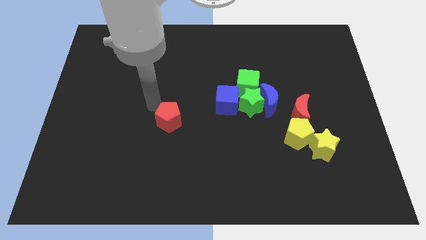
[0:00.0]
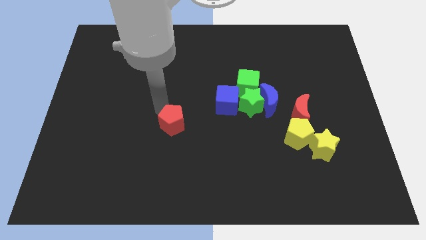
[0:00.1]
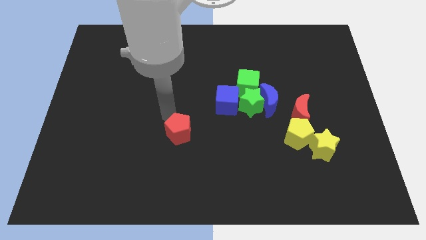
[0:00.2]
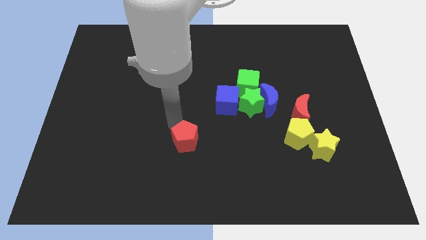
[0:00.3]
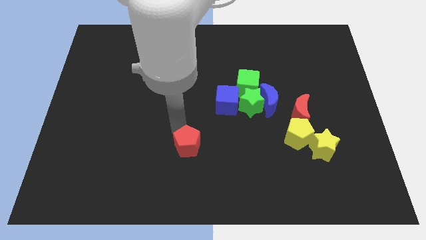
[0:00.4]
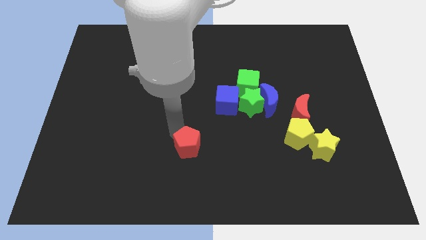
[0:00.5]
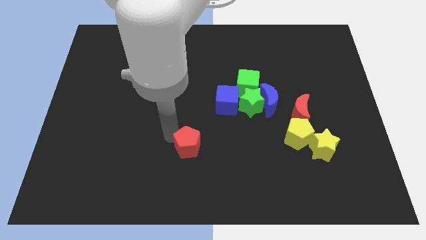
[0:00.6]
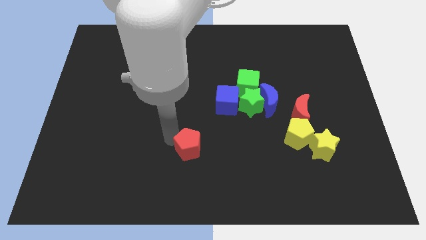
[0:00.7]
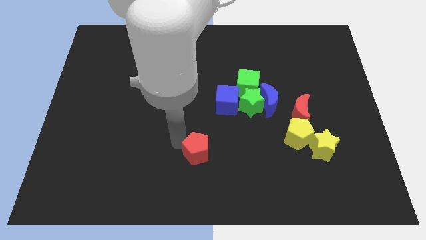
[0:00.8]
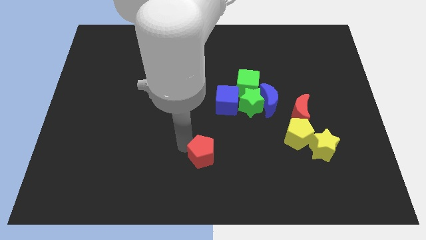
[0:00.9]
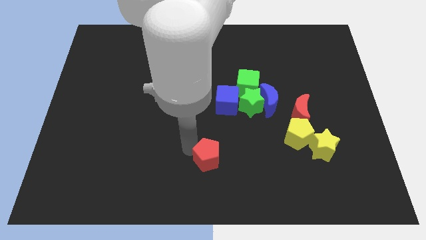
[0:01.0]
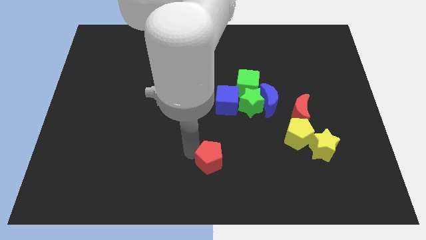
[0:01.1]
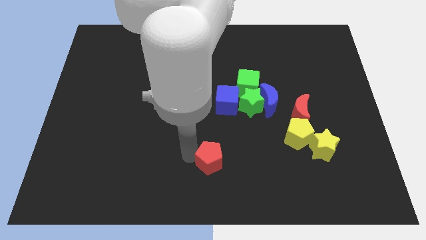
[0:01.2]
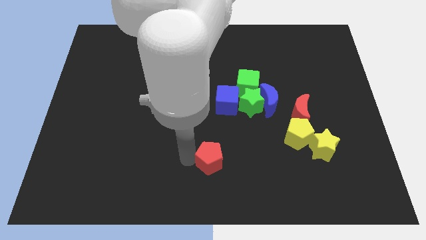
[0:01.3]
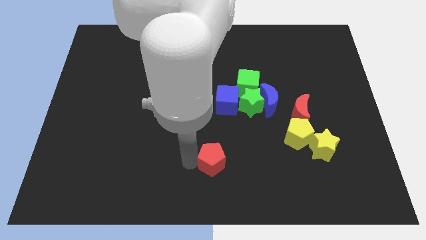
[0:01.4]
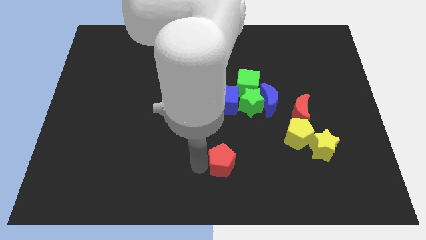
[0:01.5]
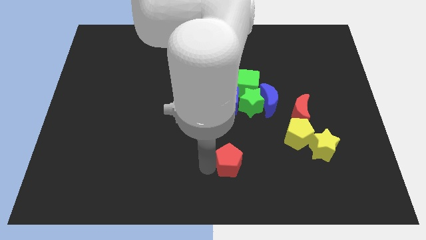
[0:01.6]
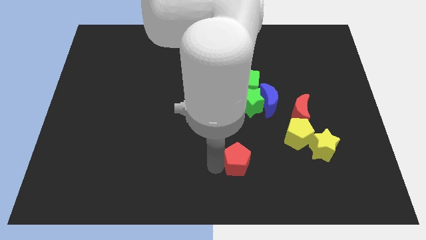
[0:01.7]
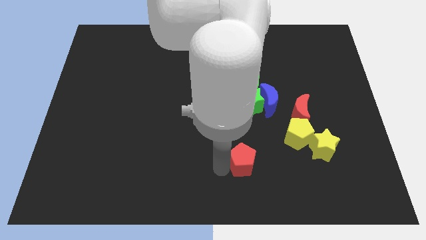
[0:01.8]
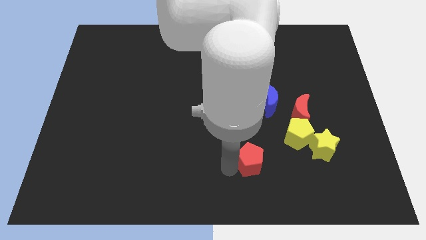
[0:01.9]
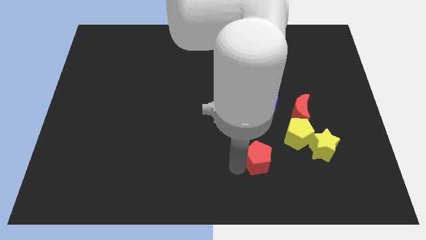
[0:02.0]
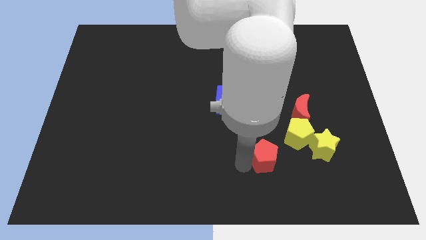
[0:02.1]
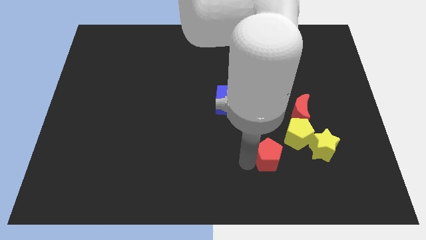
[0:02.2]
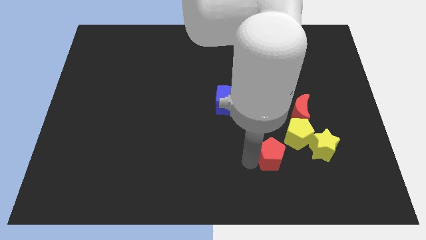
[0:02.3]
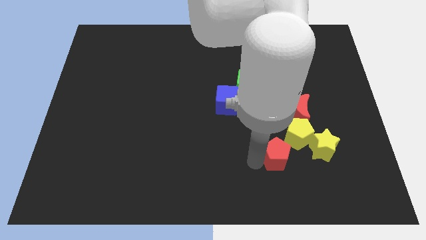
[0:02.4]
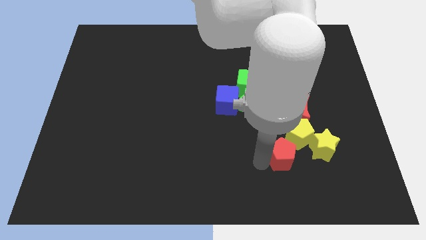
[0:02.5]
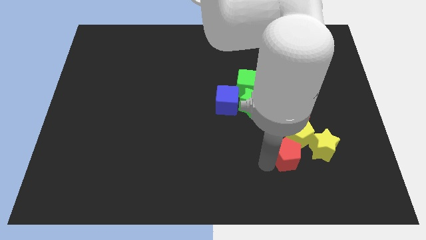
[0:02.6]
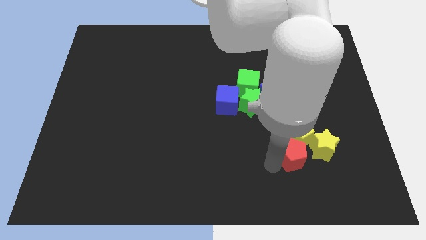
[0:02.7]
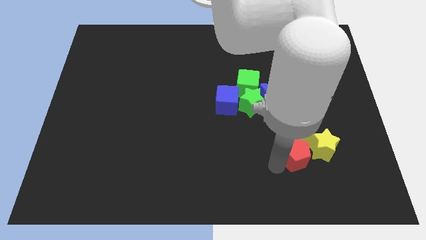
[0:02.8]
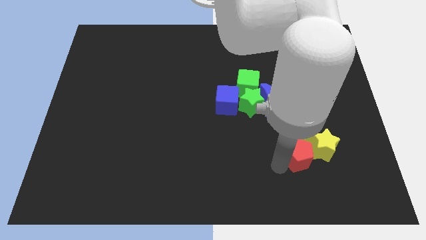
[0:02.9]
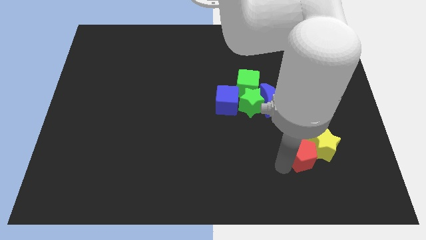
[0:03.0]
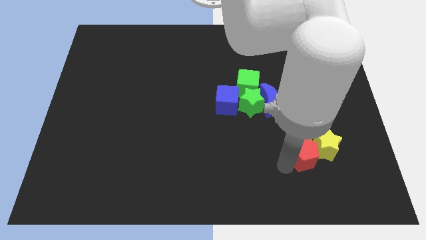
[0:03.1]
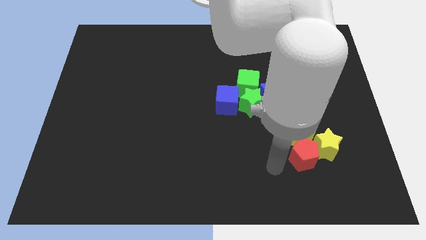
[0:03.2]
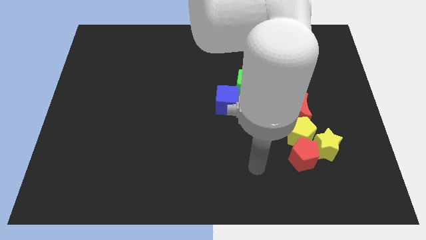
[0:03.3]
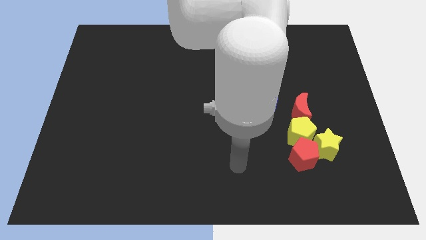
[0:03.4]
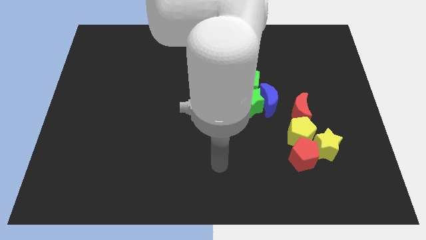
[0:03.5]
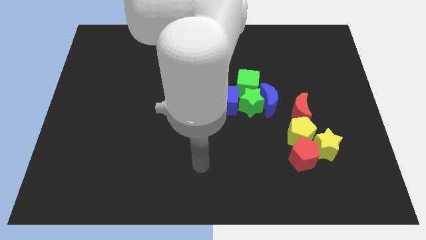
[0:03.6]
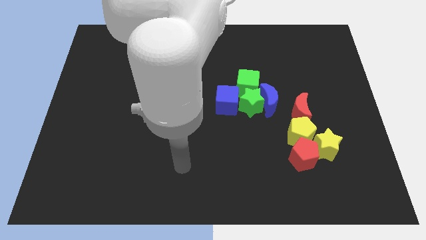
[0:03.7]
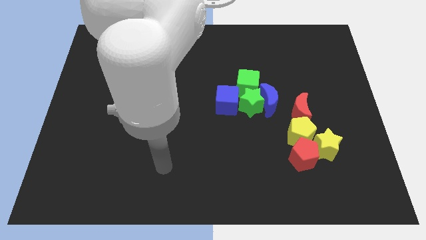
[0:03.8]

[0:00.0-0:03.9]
push the red pentagon into the yellow star

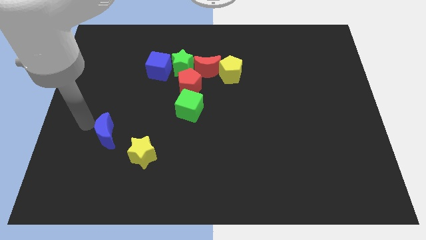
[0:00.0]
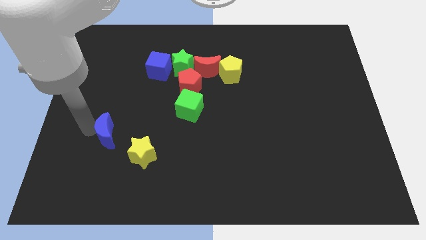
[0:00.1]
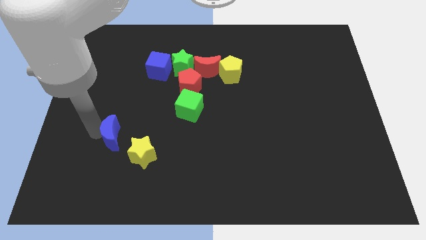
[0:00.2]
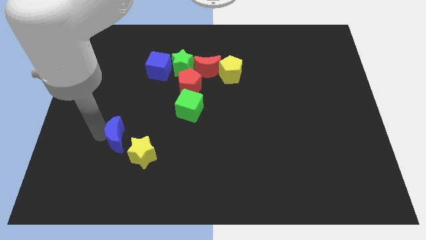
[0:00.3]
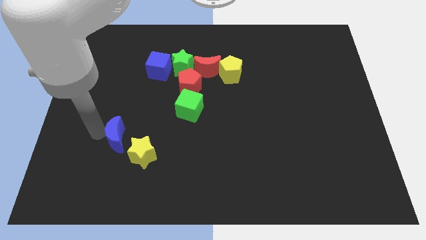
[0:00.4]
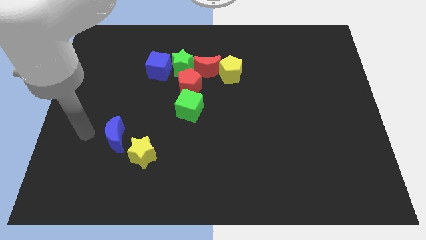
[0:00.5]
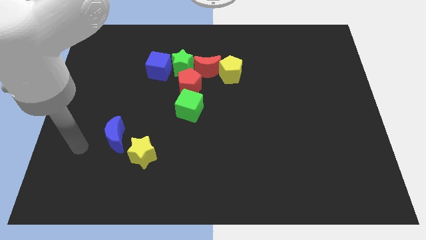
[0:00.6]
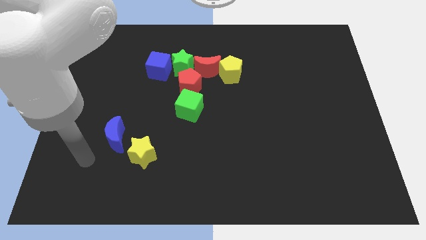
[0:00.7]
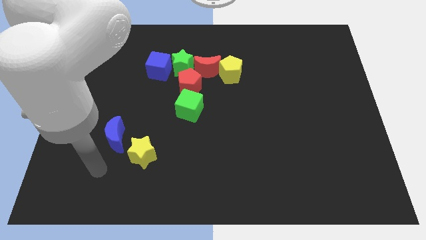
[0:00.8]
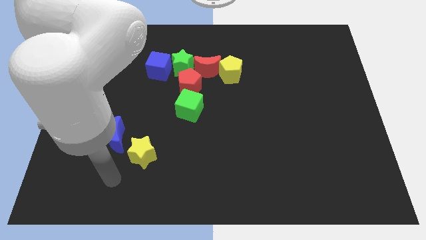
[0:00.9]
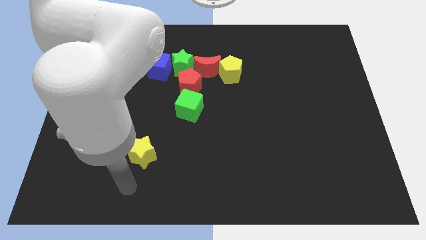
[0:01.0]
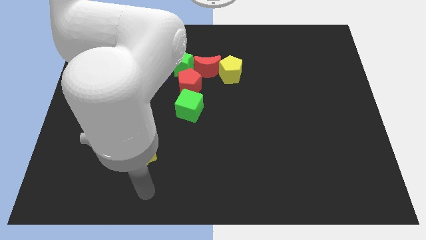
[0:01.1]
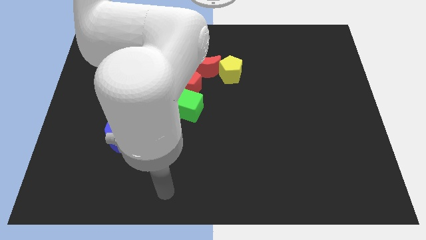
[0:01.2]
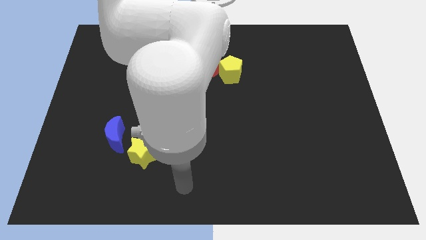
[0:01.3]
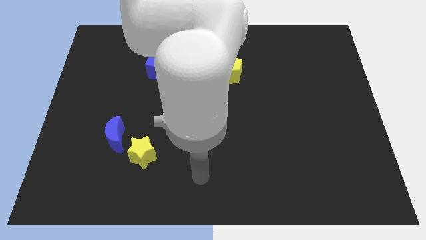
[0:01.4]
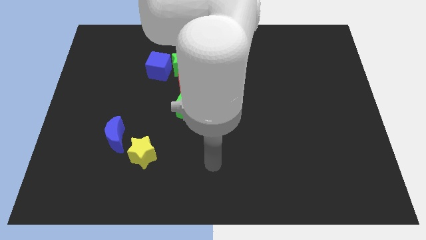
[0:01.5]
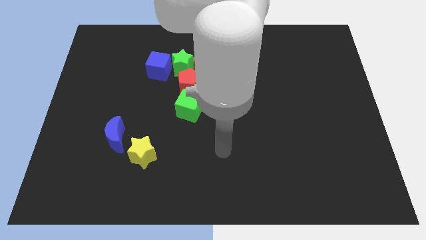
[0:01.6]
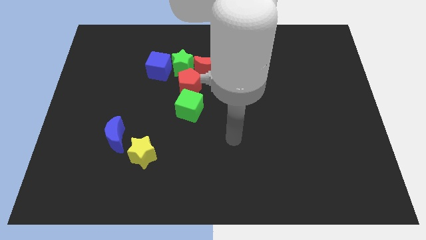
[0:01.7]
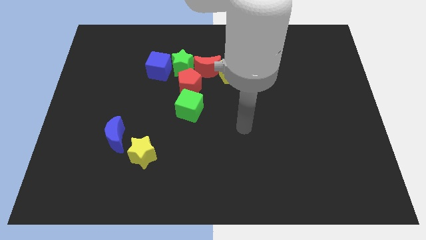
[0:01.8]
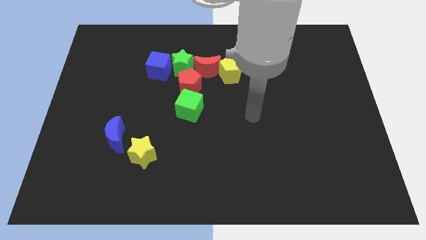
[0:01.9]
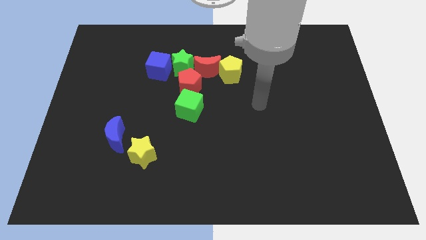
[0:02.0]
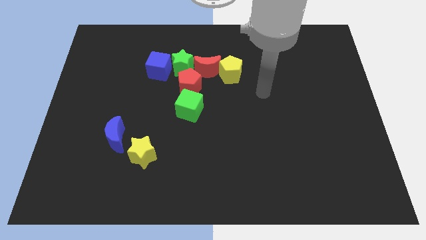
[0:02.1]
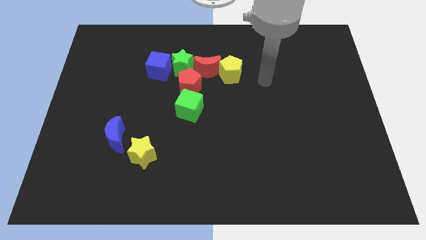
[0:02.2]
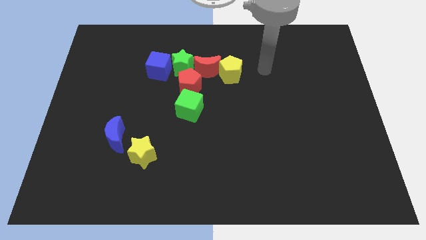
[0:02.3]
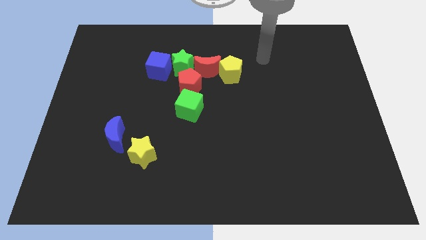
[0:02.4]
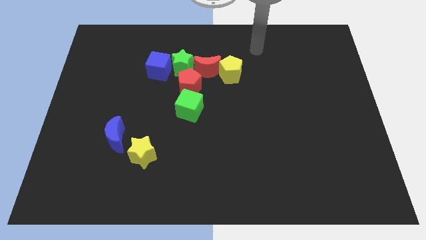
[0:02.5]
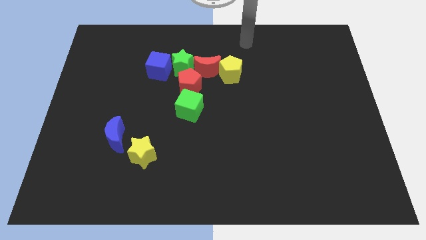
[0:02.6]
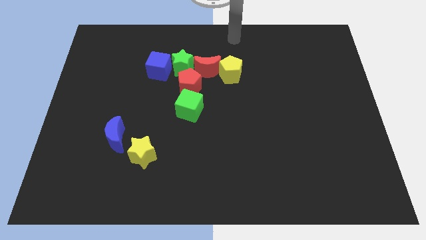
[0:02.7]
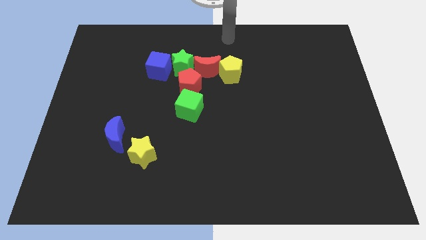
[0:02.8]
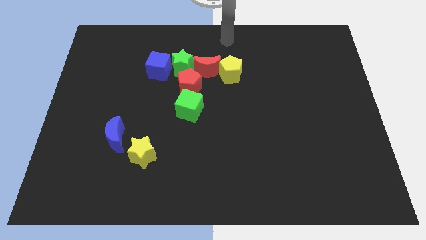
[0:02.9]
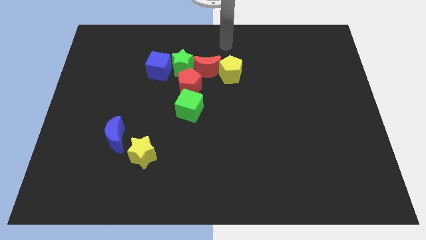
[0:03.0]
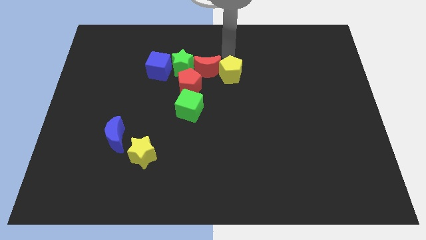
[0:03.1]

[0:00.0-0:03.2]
move your arm to the top of the yellow pentagon

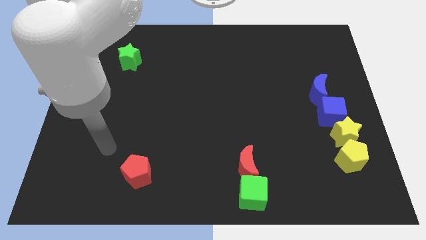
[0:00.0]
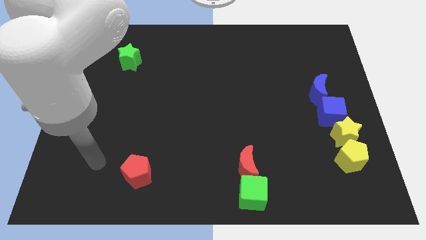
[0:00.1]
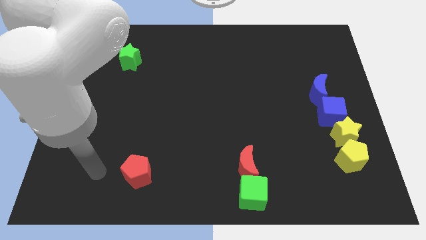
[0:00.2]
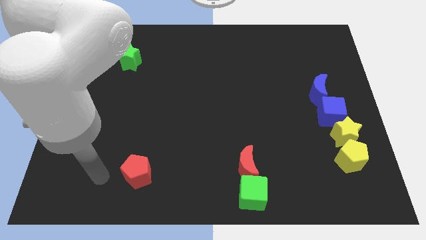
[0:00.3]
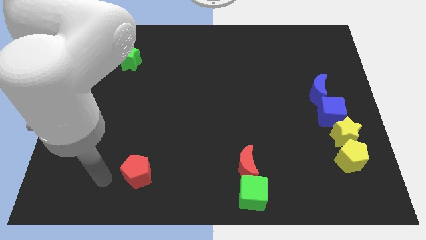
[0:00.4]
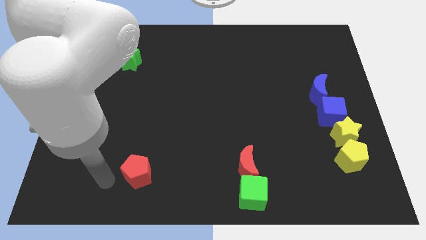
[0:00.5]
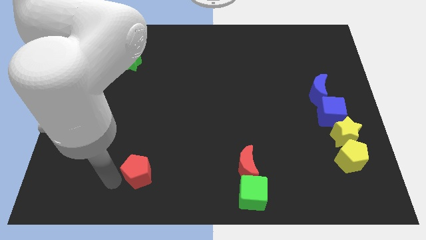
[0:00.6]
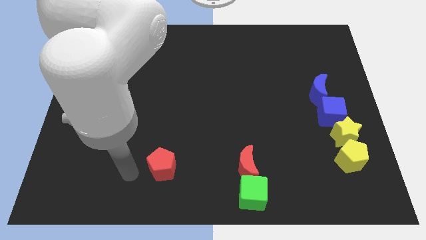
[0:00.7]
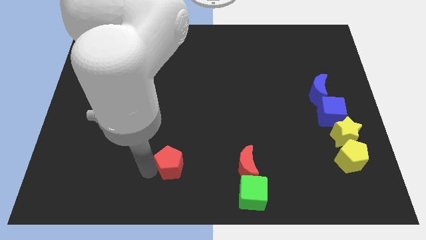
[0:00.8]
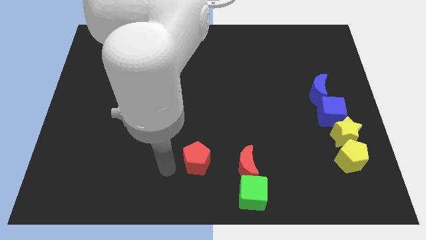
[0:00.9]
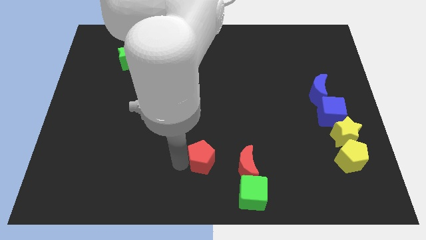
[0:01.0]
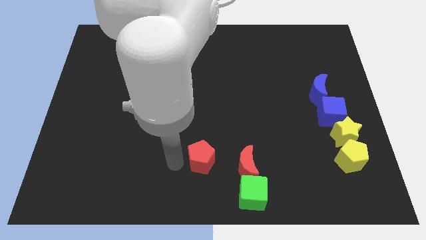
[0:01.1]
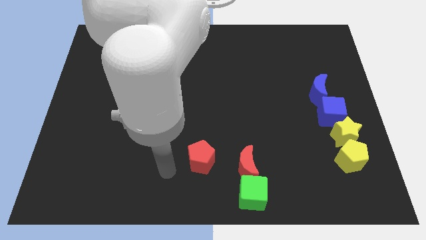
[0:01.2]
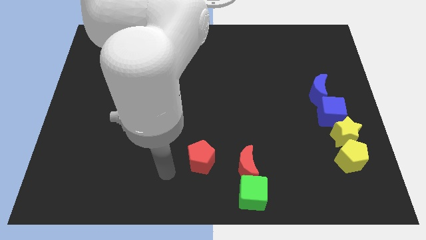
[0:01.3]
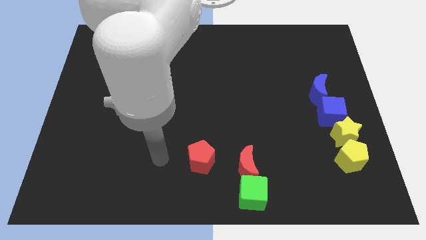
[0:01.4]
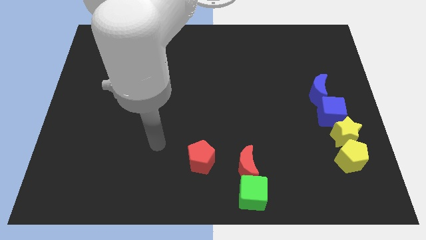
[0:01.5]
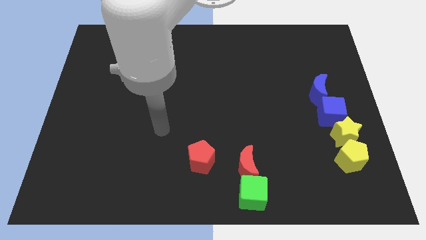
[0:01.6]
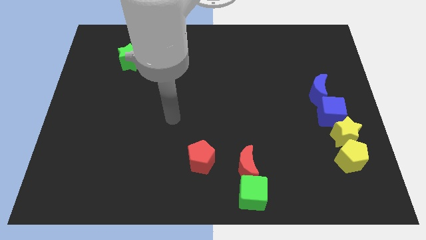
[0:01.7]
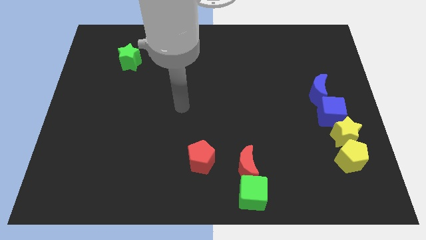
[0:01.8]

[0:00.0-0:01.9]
move the red pentagon to the right side
